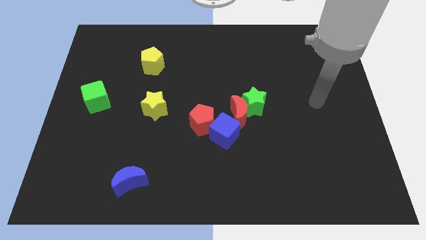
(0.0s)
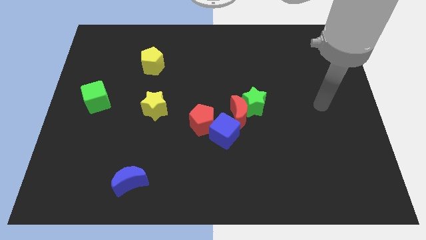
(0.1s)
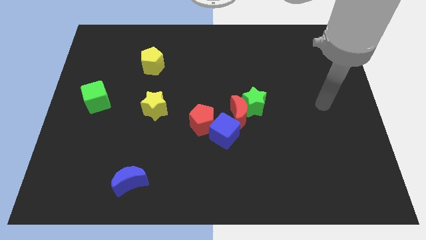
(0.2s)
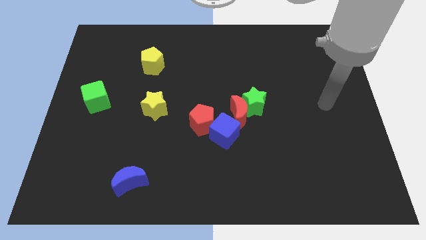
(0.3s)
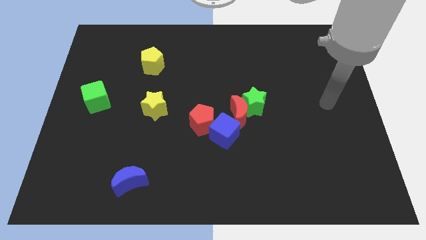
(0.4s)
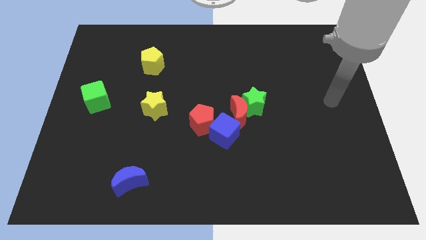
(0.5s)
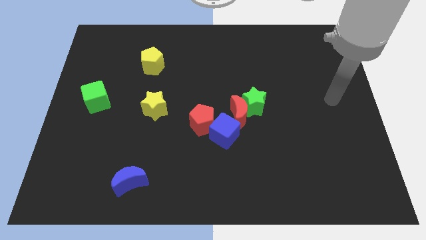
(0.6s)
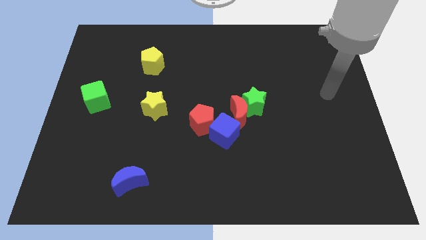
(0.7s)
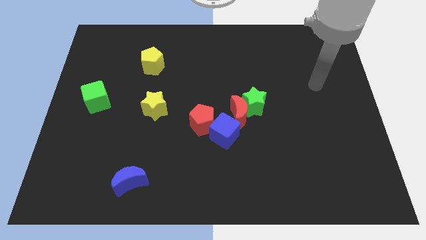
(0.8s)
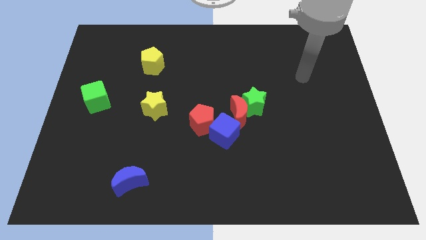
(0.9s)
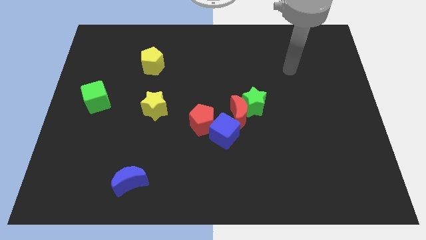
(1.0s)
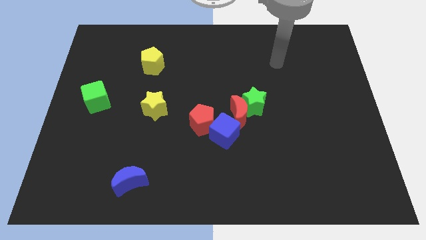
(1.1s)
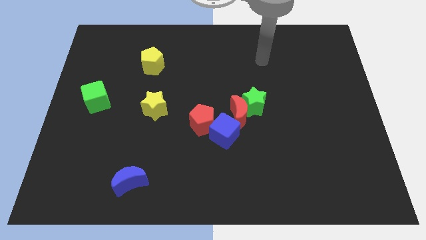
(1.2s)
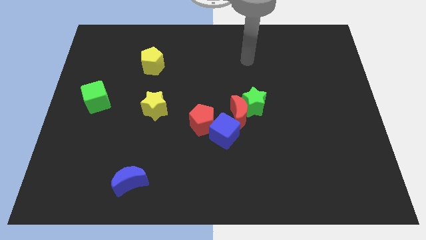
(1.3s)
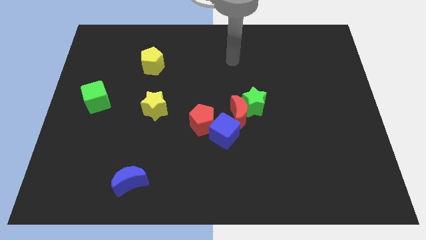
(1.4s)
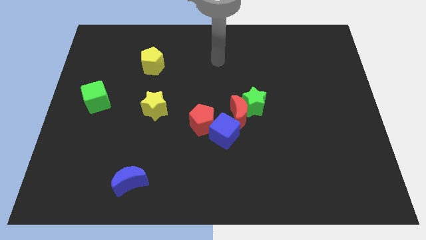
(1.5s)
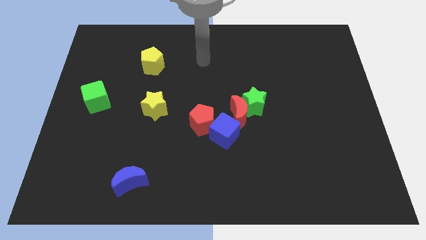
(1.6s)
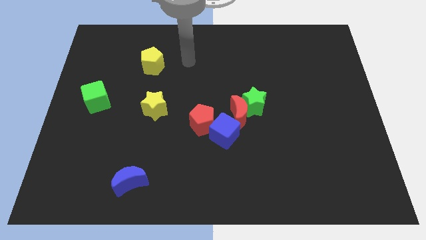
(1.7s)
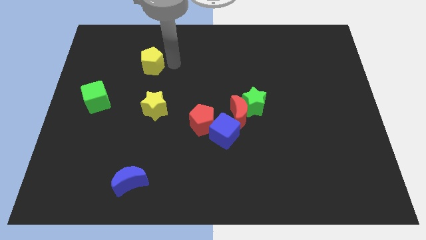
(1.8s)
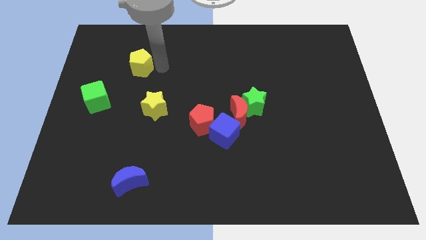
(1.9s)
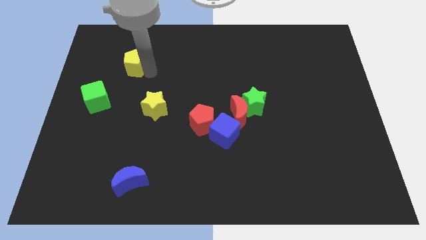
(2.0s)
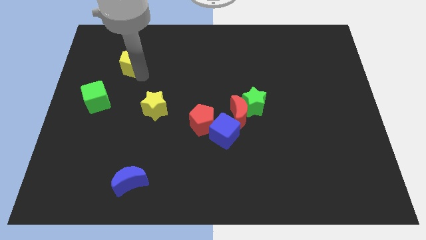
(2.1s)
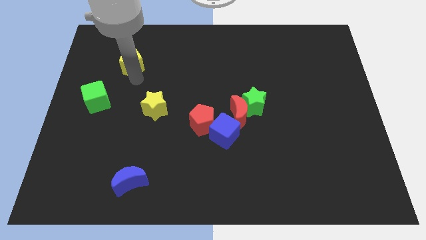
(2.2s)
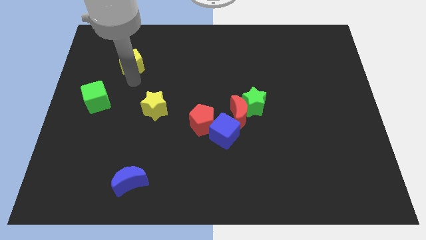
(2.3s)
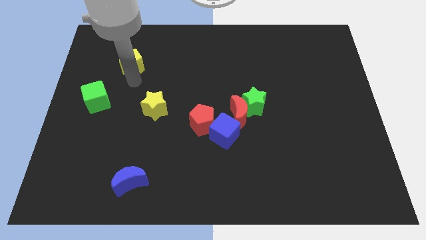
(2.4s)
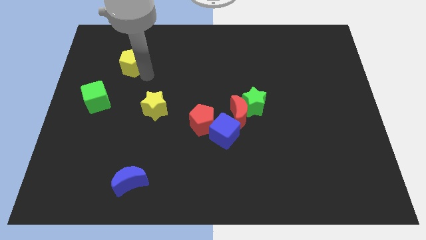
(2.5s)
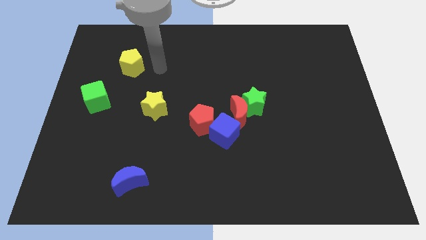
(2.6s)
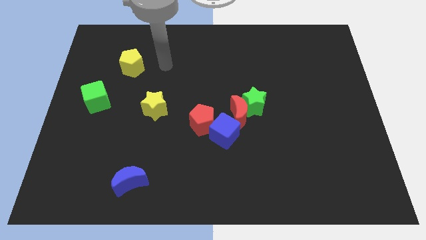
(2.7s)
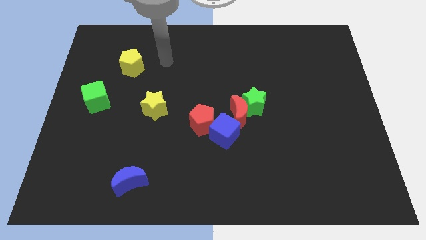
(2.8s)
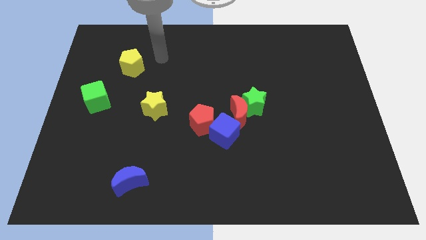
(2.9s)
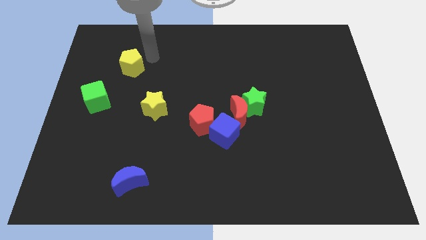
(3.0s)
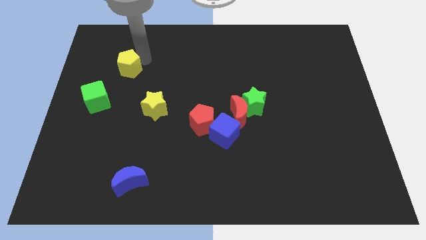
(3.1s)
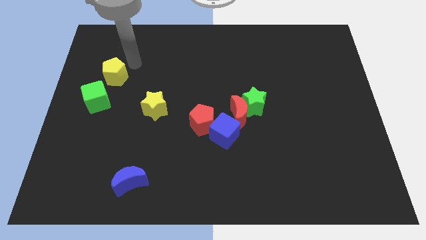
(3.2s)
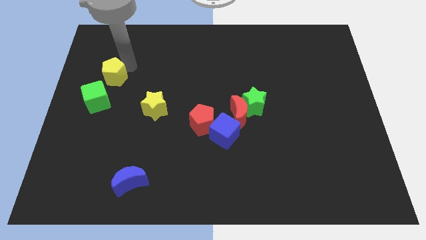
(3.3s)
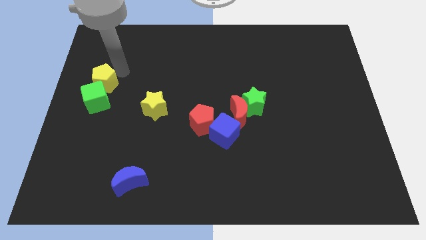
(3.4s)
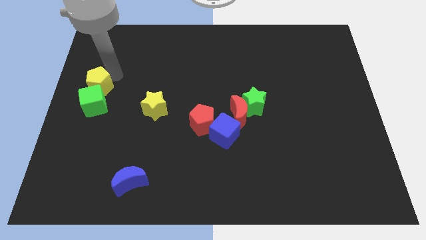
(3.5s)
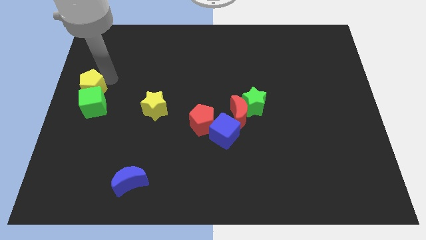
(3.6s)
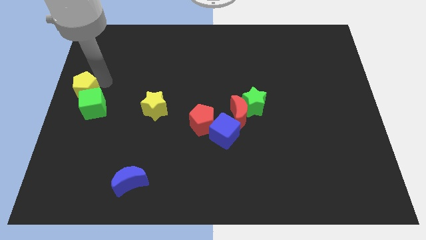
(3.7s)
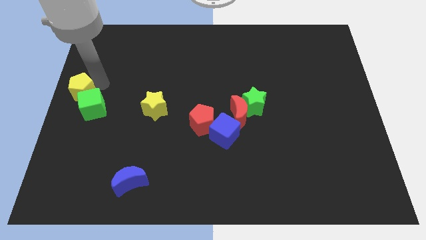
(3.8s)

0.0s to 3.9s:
move the yellow pentagon into the green cube

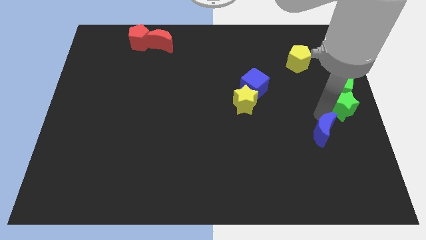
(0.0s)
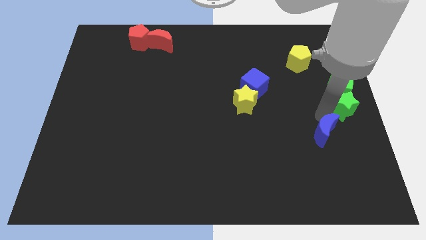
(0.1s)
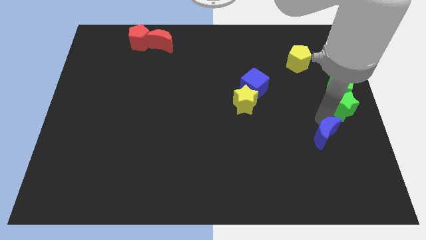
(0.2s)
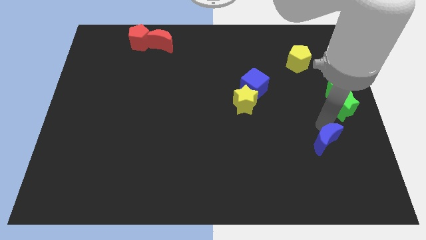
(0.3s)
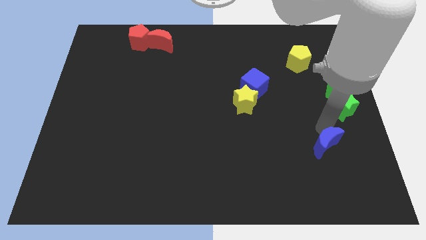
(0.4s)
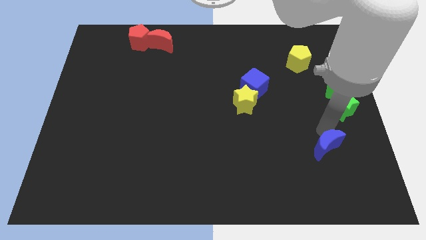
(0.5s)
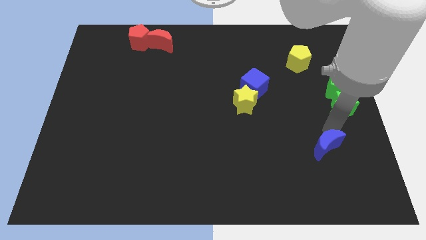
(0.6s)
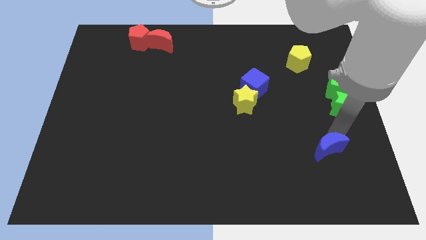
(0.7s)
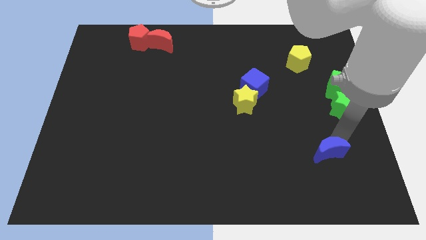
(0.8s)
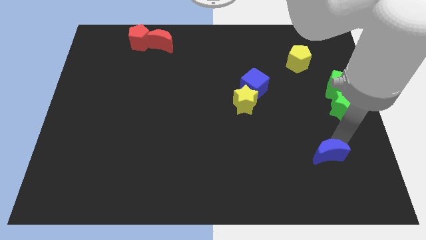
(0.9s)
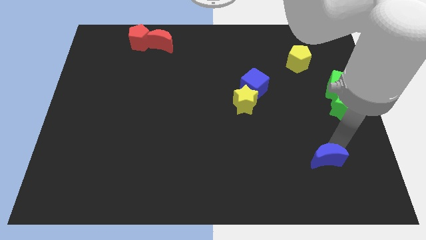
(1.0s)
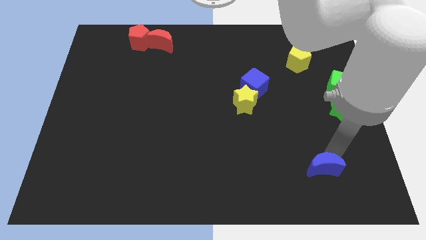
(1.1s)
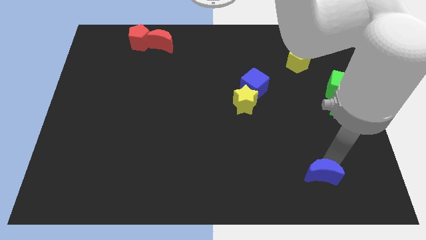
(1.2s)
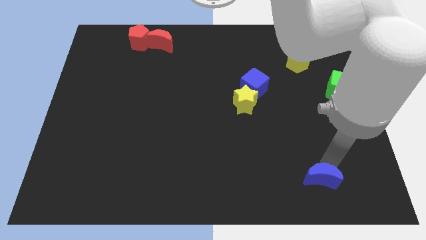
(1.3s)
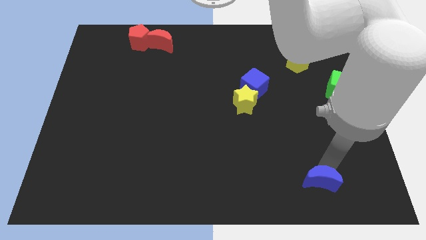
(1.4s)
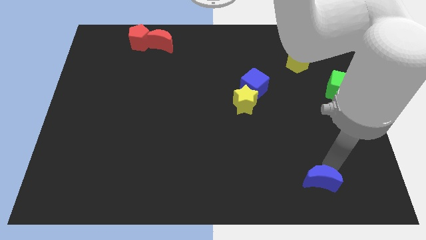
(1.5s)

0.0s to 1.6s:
move the blue crescent to the bottom

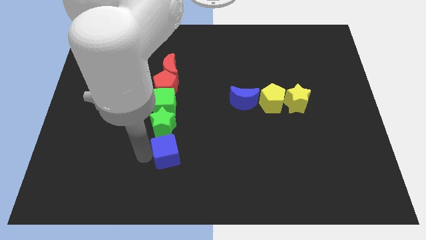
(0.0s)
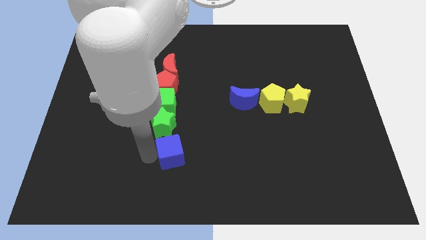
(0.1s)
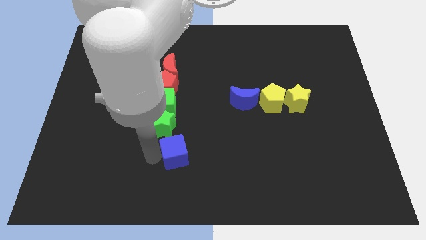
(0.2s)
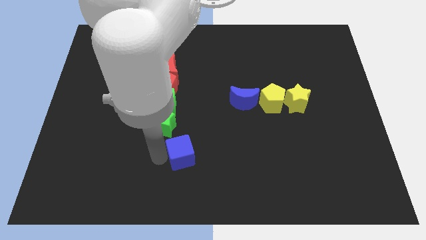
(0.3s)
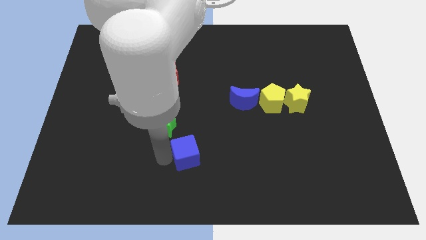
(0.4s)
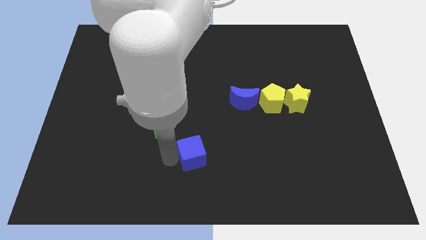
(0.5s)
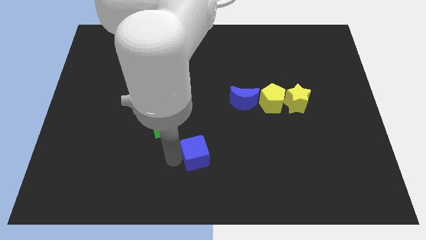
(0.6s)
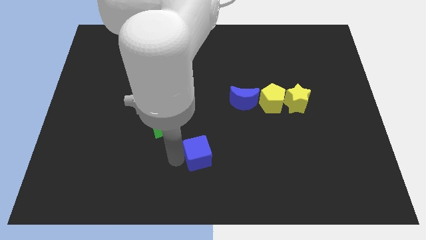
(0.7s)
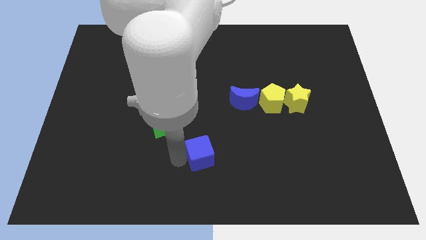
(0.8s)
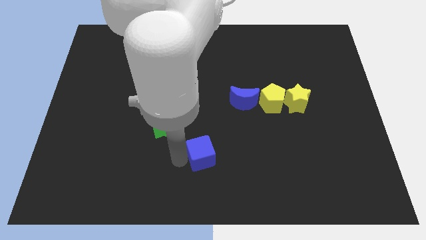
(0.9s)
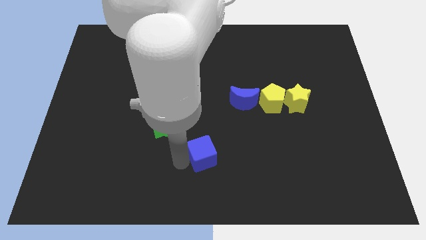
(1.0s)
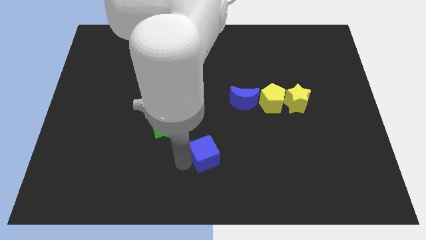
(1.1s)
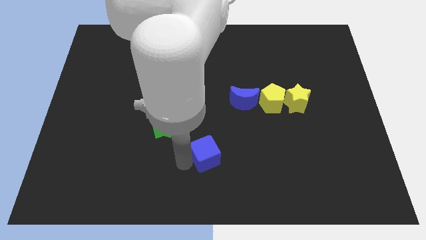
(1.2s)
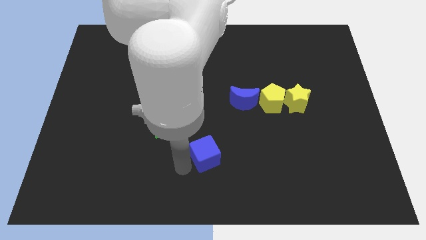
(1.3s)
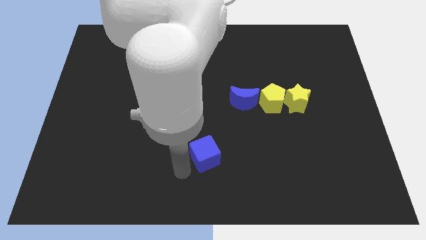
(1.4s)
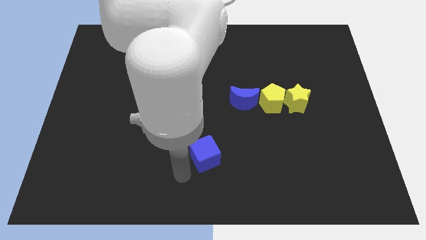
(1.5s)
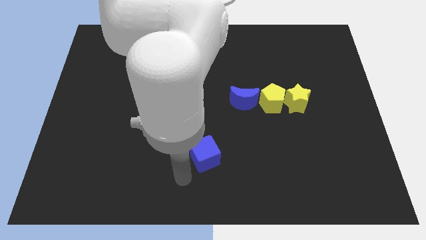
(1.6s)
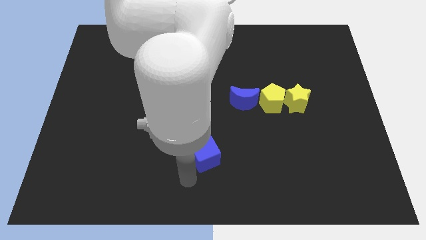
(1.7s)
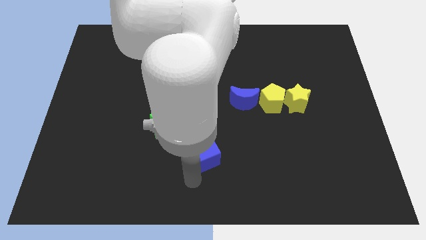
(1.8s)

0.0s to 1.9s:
separate blue cube from the vertical group of blocks

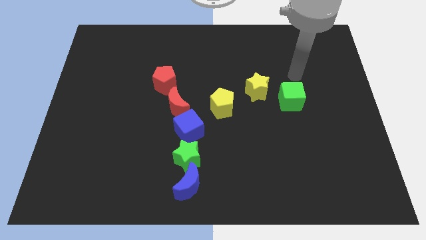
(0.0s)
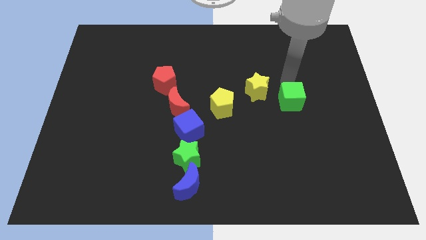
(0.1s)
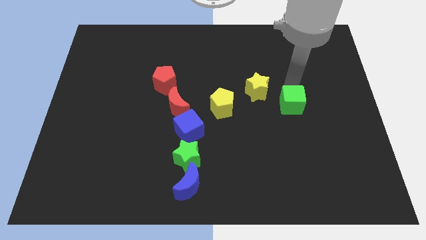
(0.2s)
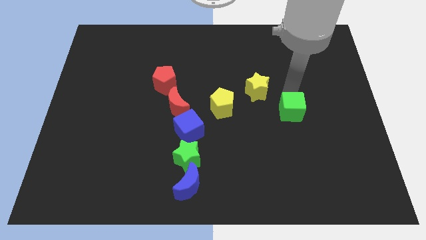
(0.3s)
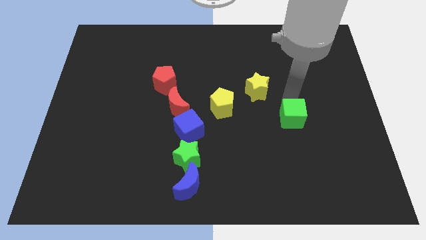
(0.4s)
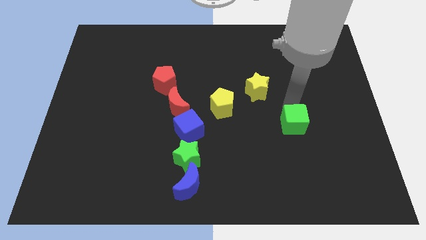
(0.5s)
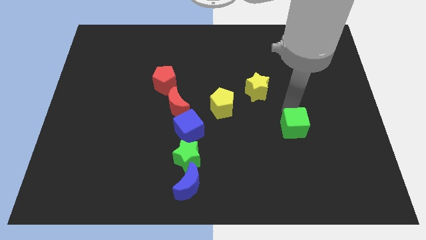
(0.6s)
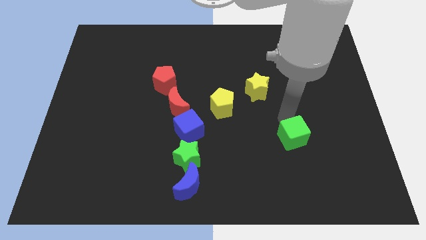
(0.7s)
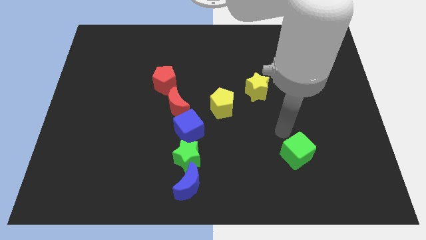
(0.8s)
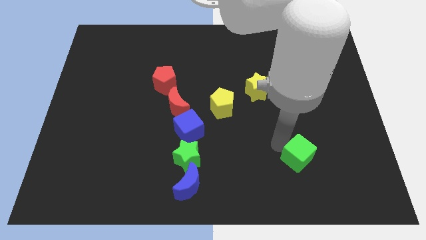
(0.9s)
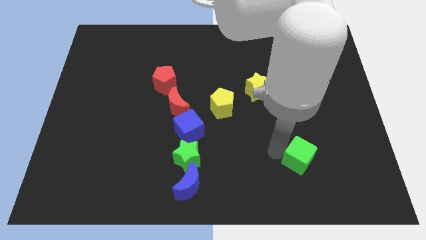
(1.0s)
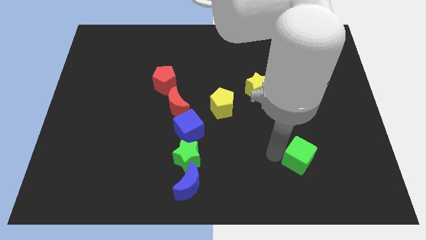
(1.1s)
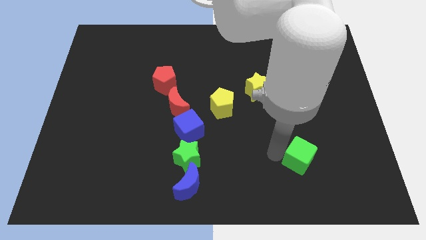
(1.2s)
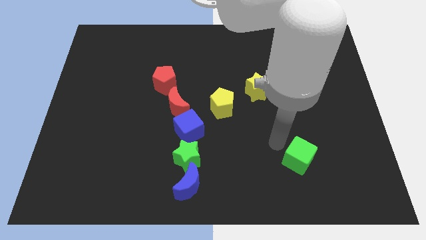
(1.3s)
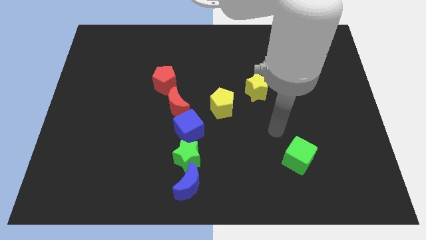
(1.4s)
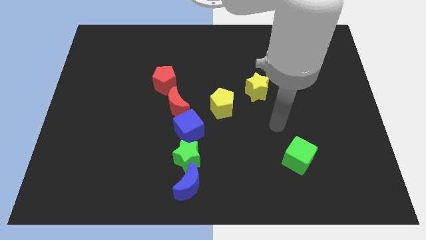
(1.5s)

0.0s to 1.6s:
slightly move the green cube towards down
